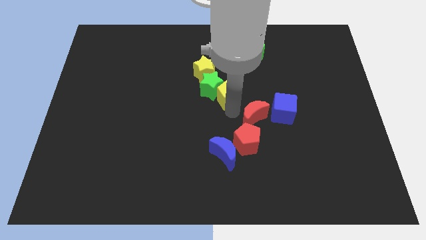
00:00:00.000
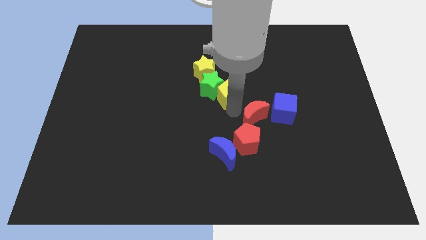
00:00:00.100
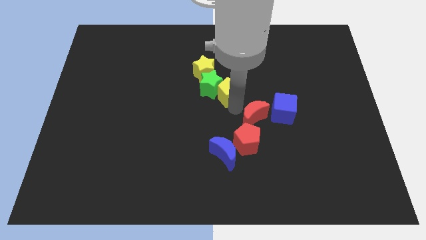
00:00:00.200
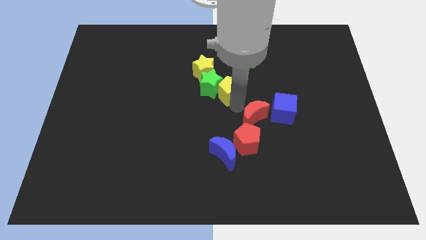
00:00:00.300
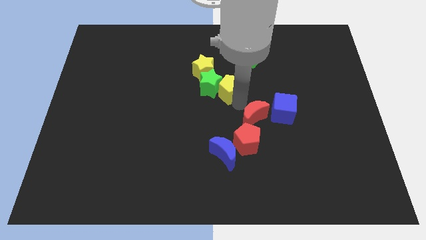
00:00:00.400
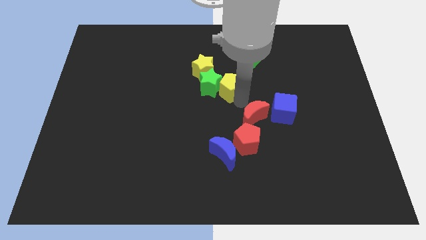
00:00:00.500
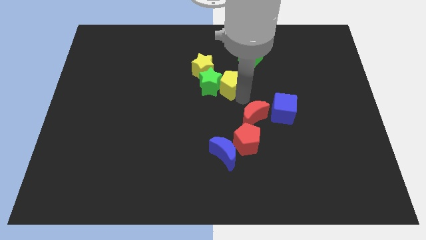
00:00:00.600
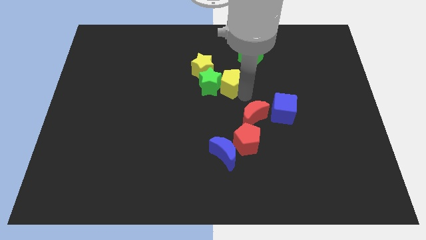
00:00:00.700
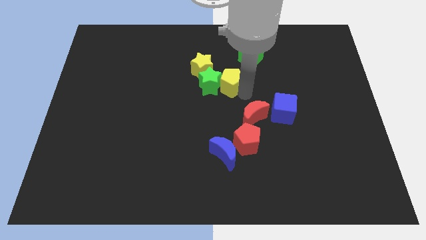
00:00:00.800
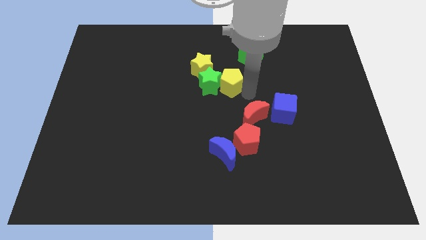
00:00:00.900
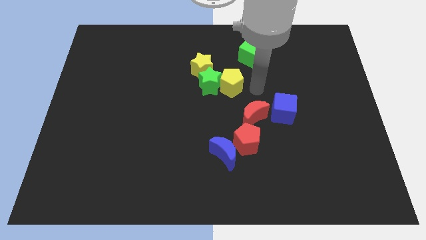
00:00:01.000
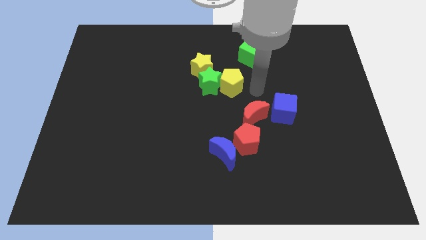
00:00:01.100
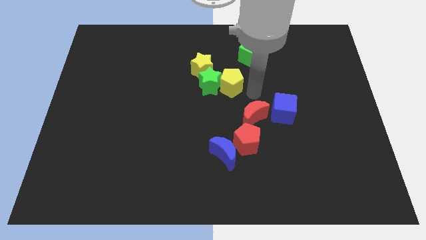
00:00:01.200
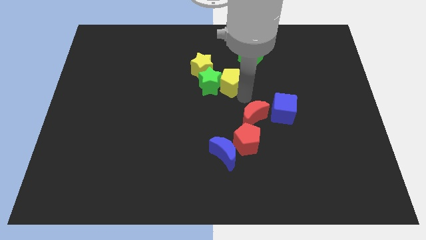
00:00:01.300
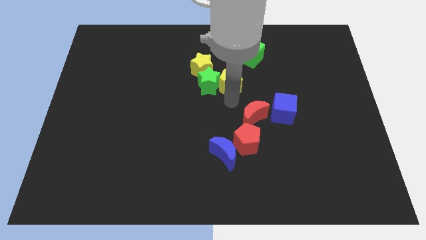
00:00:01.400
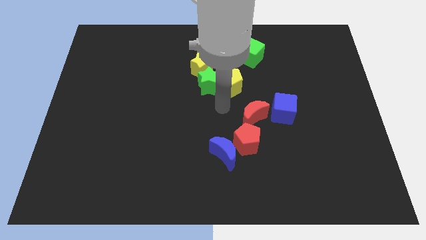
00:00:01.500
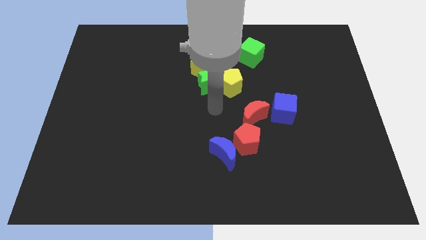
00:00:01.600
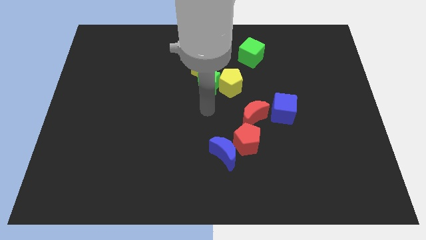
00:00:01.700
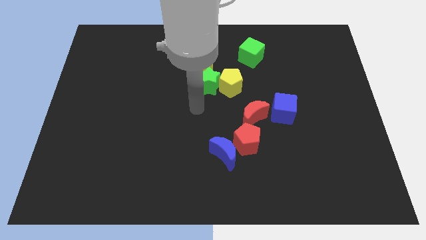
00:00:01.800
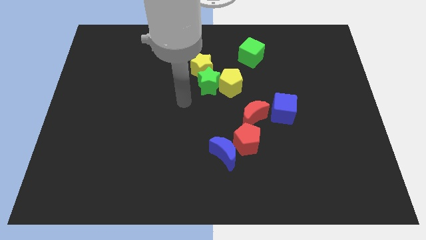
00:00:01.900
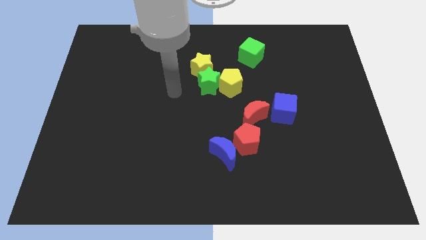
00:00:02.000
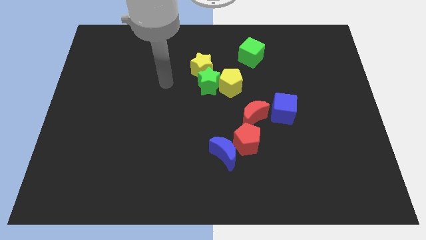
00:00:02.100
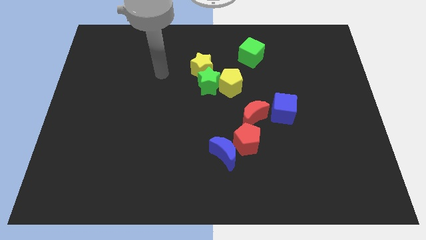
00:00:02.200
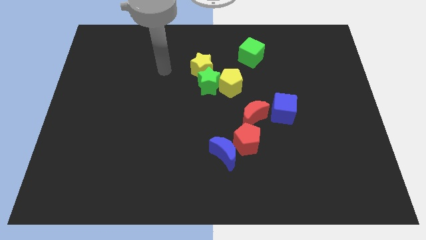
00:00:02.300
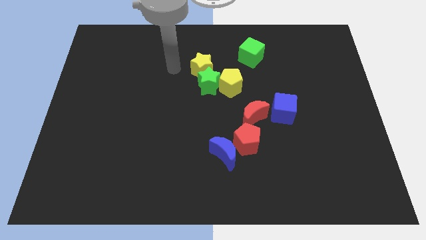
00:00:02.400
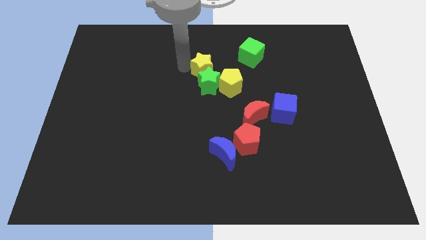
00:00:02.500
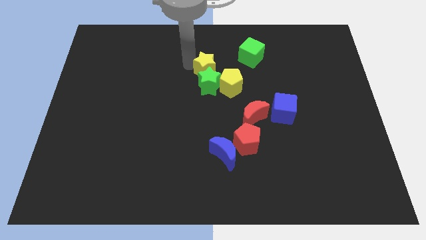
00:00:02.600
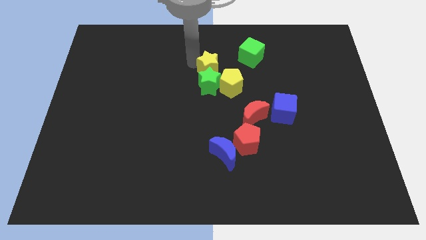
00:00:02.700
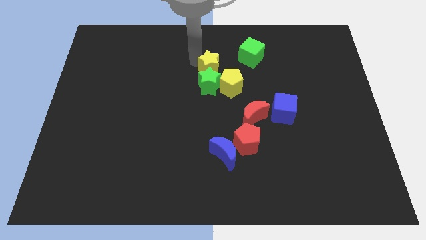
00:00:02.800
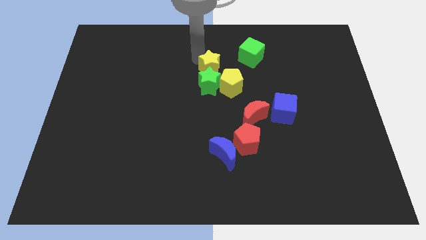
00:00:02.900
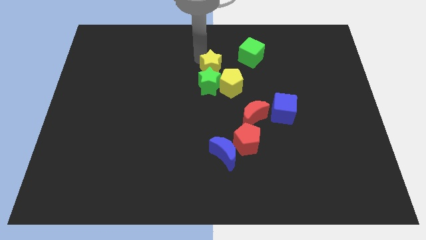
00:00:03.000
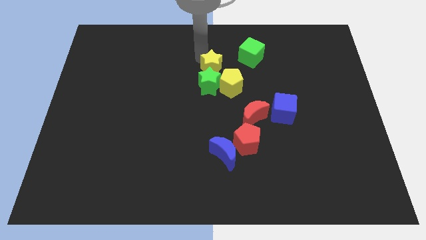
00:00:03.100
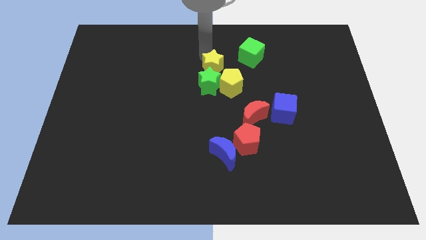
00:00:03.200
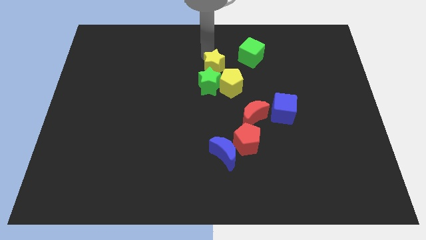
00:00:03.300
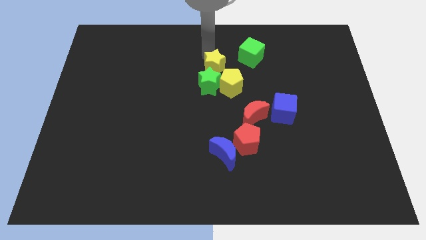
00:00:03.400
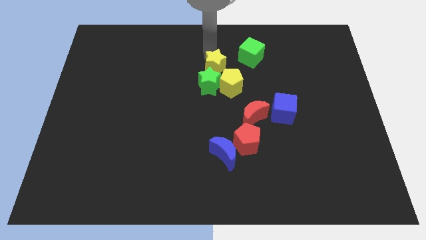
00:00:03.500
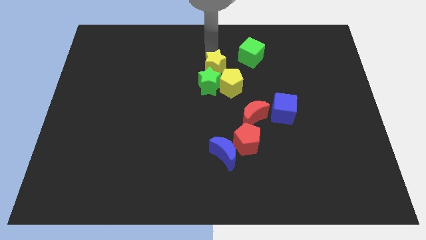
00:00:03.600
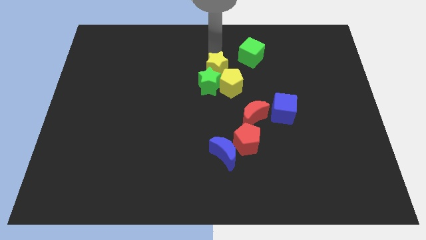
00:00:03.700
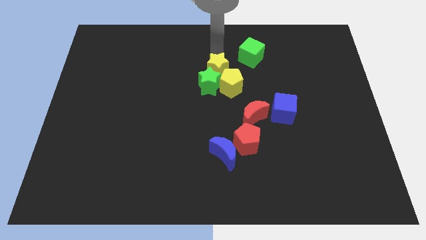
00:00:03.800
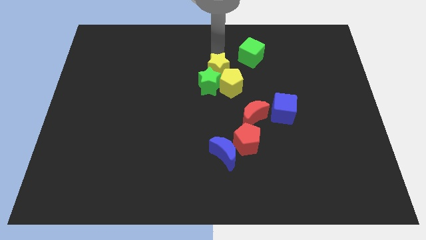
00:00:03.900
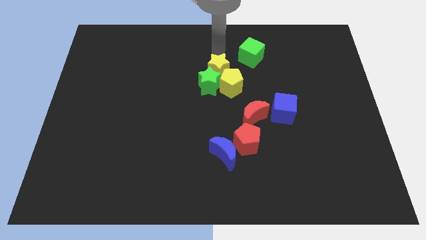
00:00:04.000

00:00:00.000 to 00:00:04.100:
place the yellow star to the top of the yellow pentagon

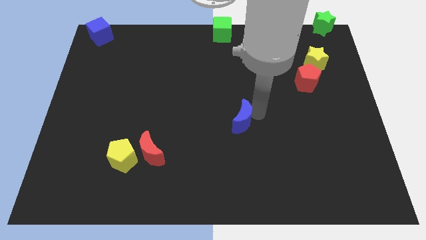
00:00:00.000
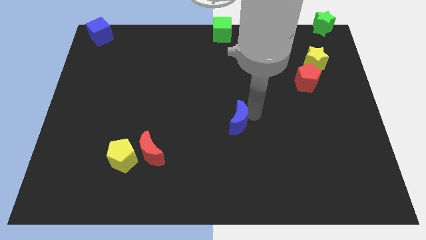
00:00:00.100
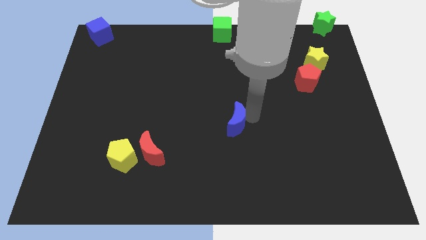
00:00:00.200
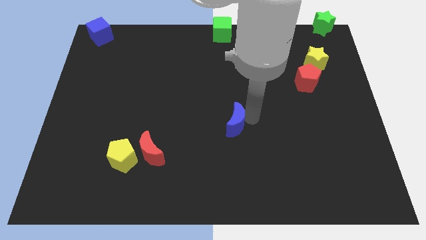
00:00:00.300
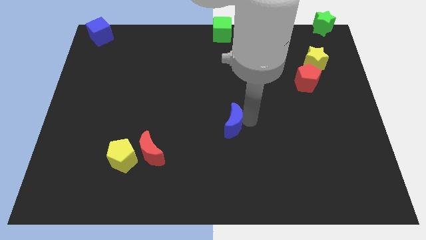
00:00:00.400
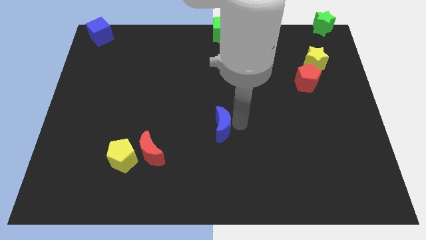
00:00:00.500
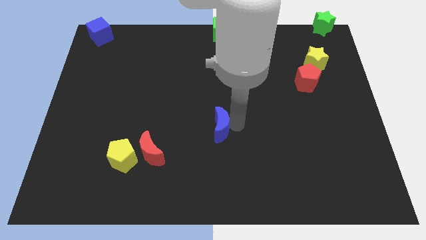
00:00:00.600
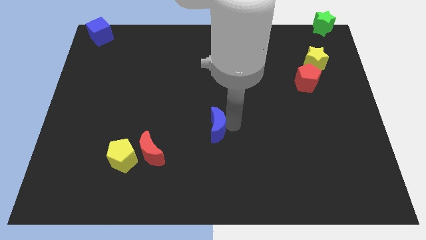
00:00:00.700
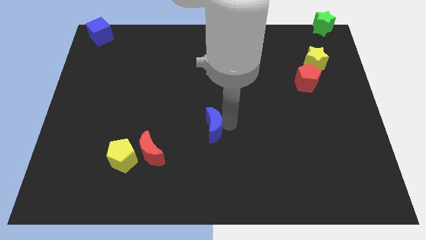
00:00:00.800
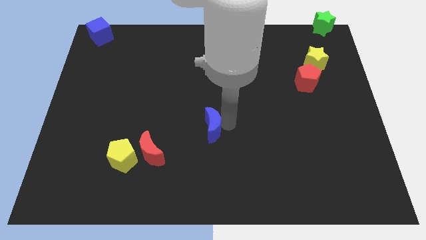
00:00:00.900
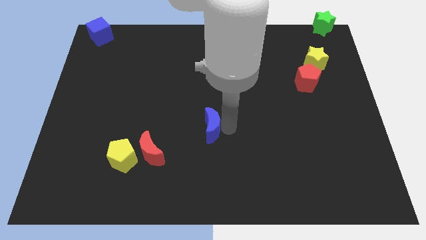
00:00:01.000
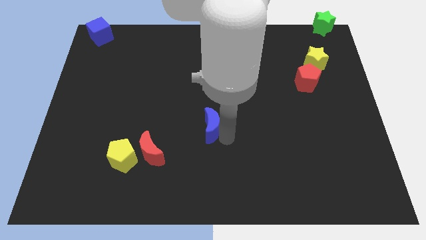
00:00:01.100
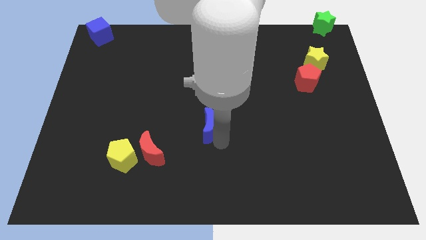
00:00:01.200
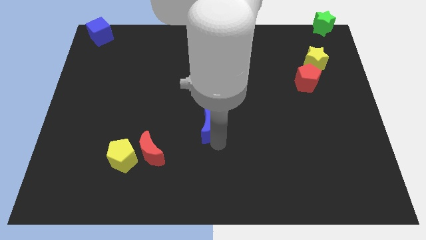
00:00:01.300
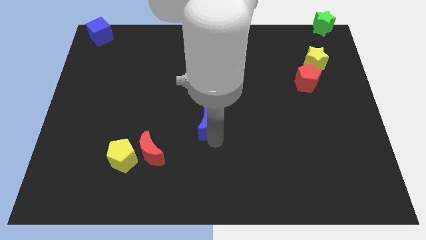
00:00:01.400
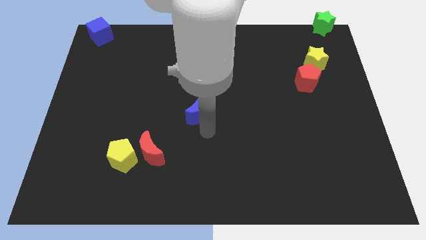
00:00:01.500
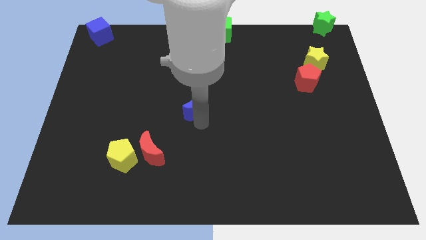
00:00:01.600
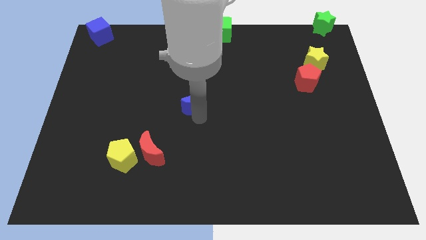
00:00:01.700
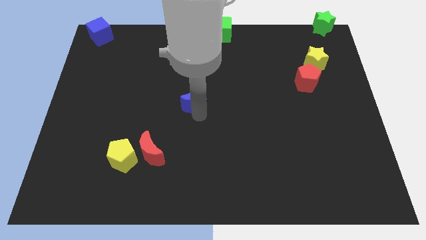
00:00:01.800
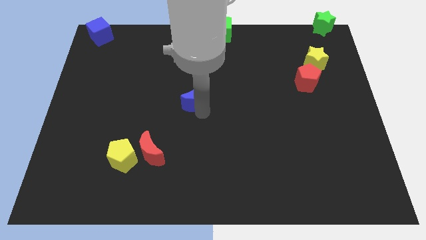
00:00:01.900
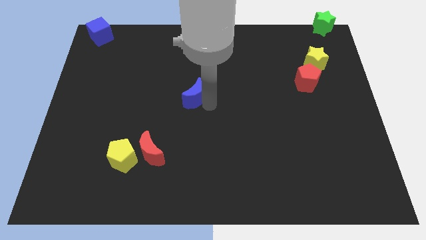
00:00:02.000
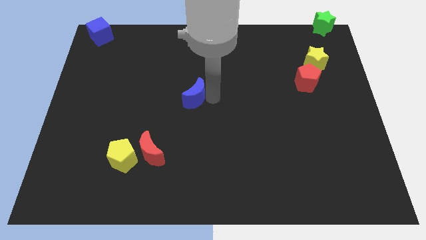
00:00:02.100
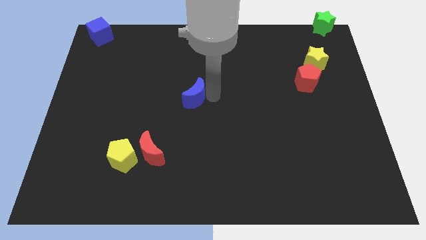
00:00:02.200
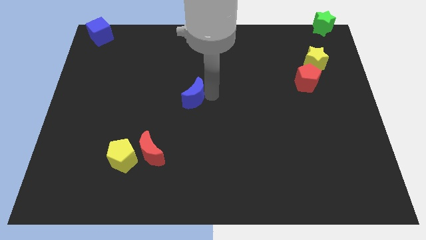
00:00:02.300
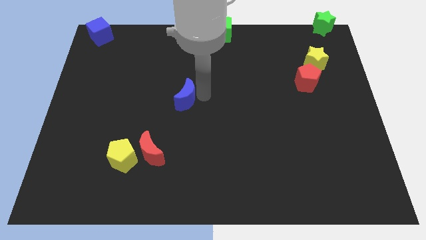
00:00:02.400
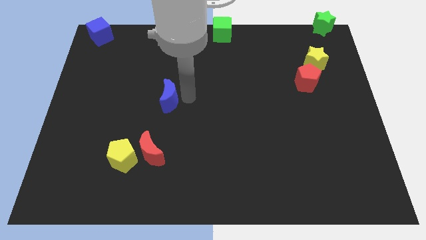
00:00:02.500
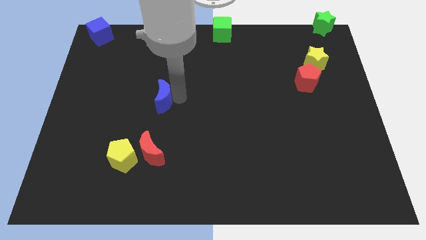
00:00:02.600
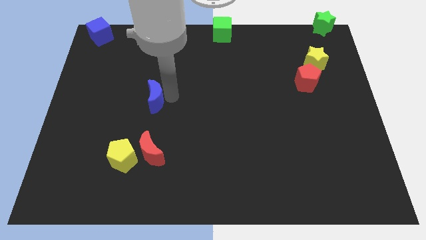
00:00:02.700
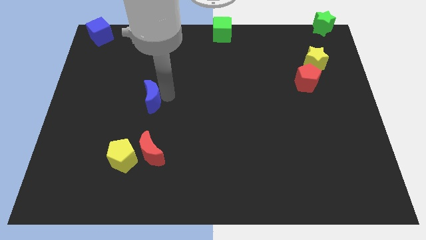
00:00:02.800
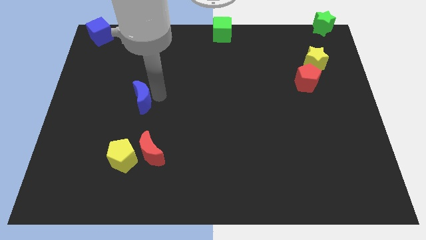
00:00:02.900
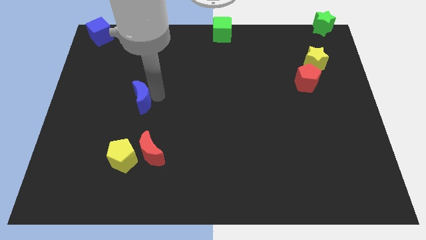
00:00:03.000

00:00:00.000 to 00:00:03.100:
push blue crescent above red crescent

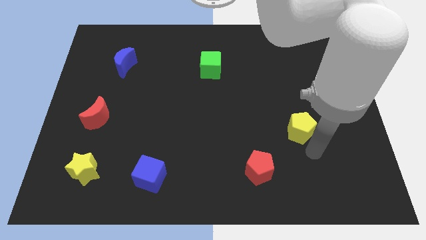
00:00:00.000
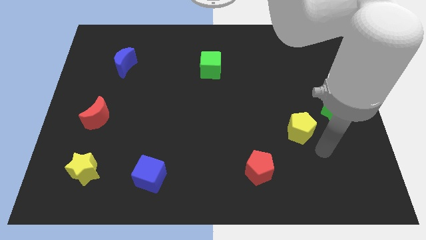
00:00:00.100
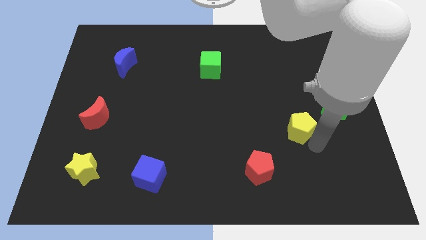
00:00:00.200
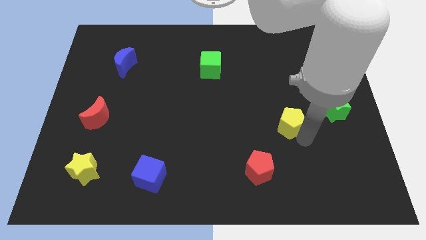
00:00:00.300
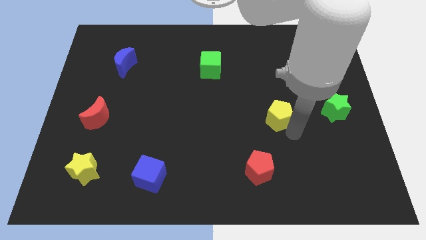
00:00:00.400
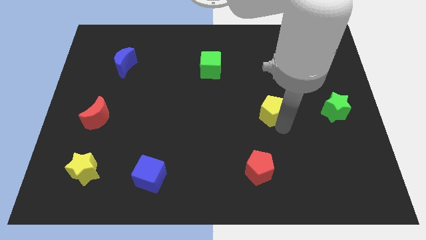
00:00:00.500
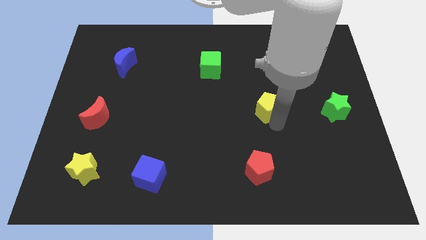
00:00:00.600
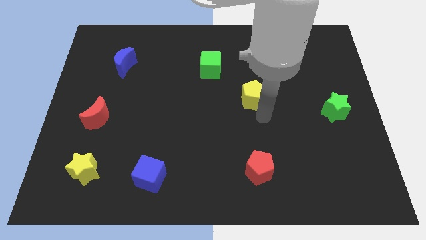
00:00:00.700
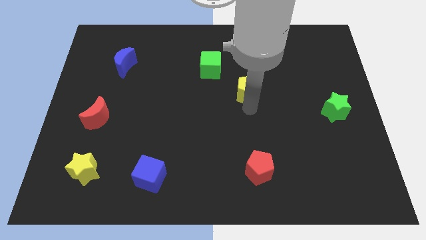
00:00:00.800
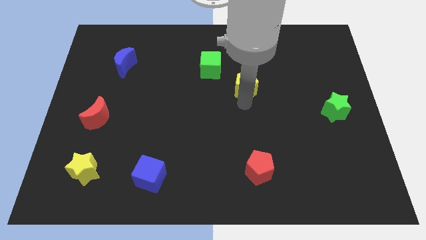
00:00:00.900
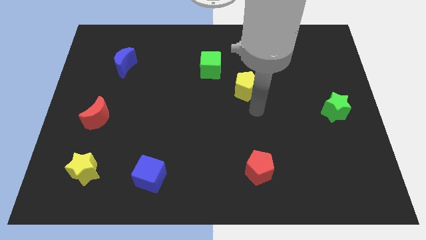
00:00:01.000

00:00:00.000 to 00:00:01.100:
push the yellow pentagon towards the green cube

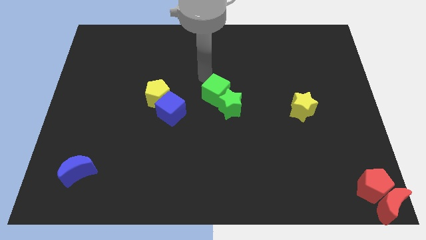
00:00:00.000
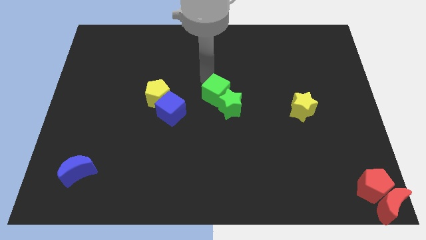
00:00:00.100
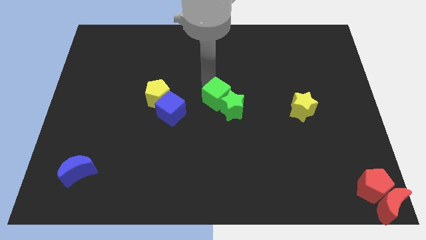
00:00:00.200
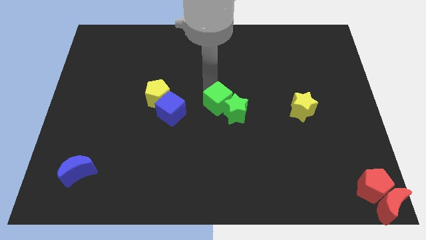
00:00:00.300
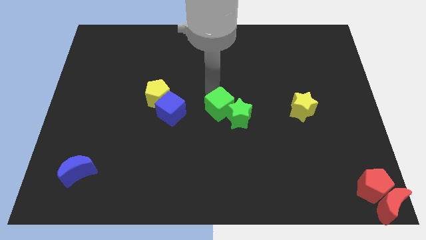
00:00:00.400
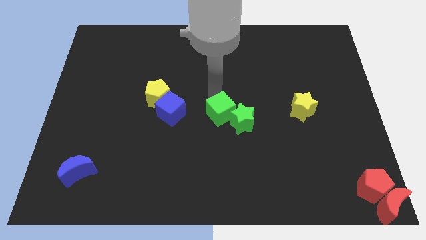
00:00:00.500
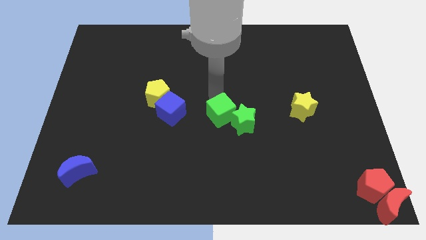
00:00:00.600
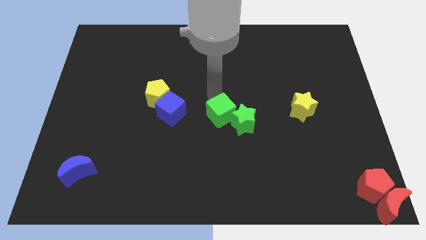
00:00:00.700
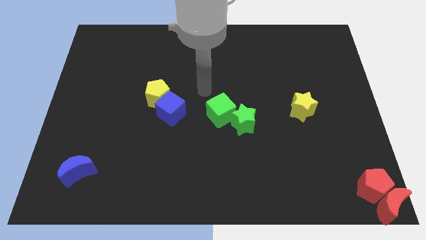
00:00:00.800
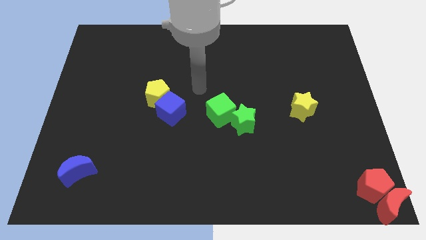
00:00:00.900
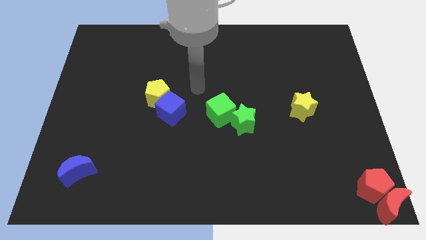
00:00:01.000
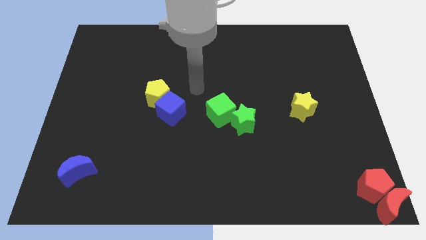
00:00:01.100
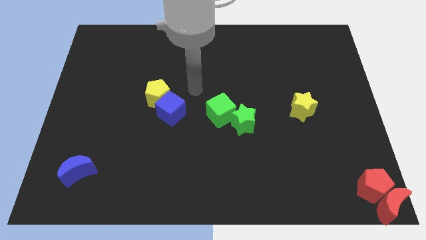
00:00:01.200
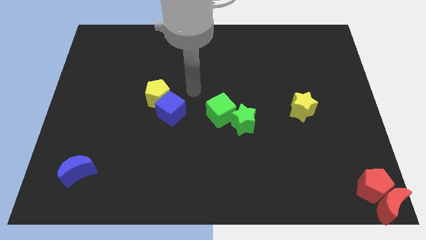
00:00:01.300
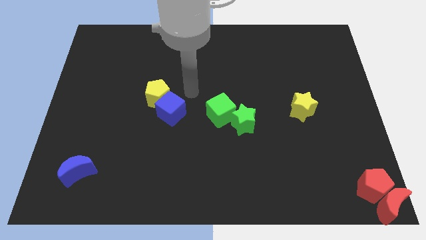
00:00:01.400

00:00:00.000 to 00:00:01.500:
place the green cube along with green star in center of the board
